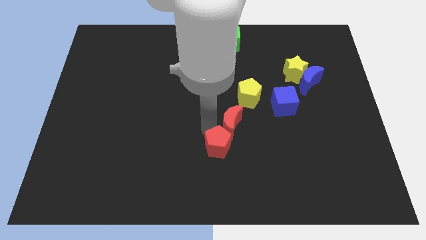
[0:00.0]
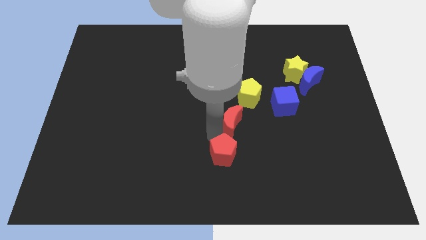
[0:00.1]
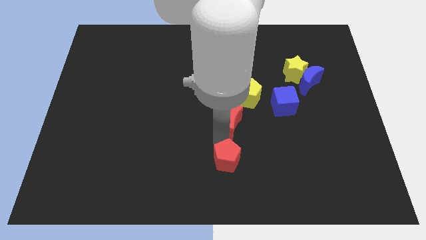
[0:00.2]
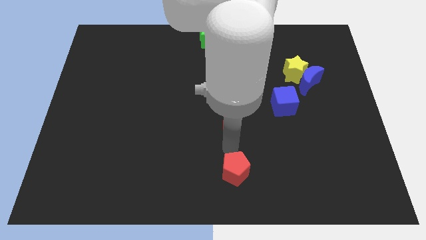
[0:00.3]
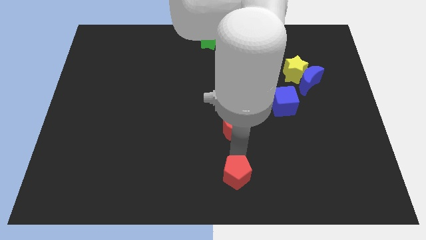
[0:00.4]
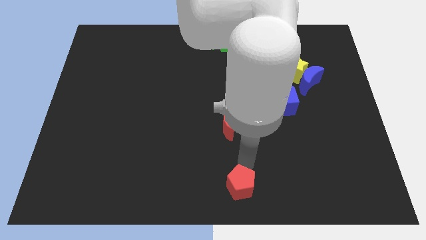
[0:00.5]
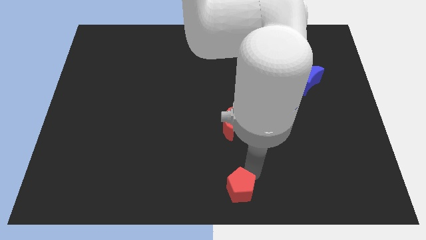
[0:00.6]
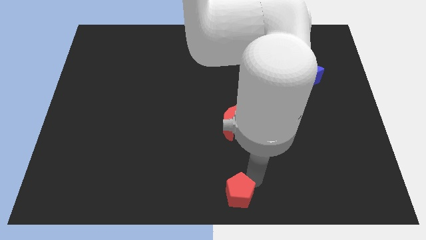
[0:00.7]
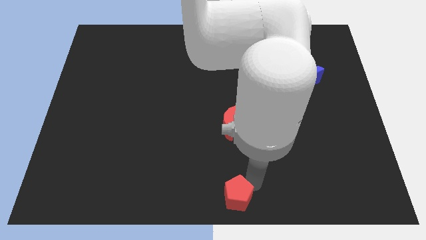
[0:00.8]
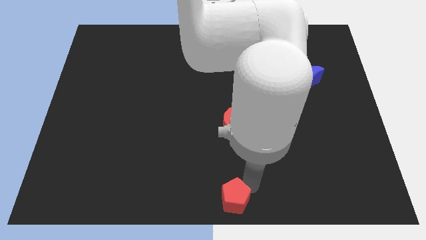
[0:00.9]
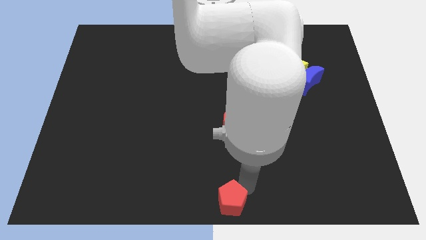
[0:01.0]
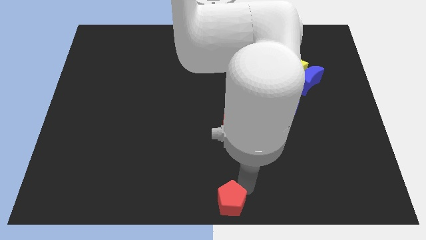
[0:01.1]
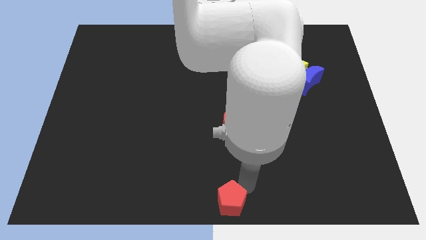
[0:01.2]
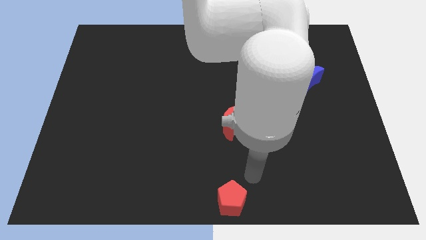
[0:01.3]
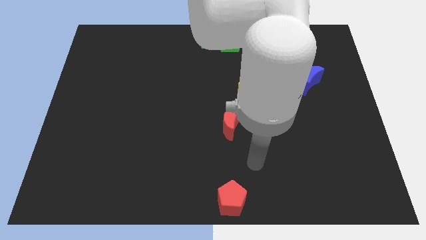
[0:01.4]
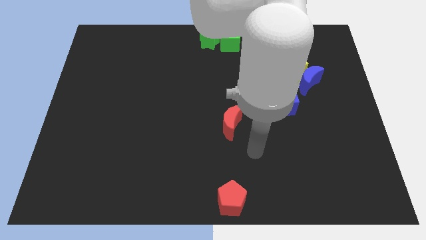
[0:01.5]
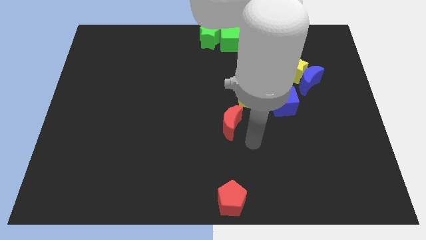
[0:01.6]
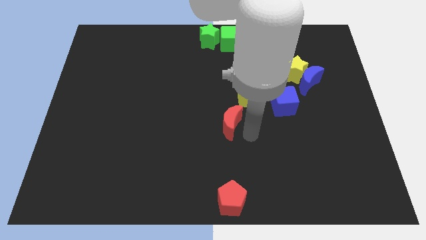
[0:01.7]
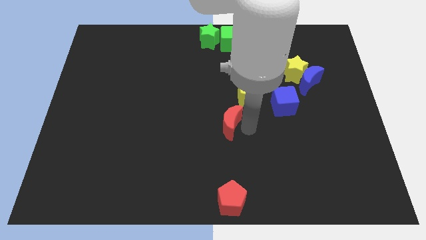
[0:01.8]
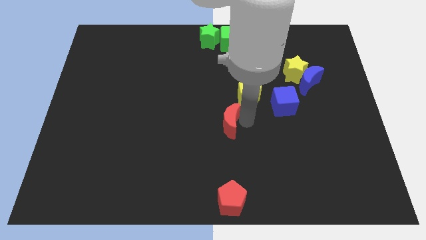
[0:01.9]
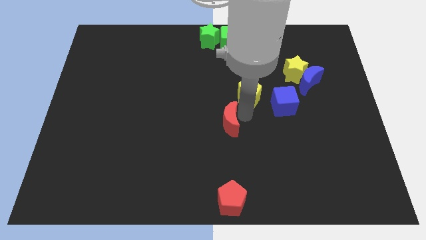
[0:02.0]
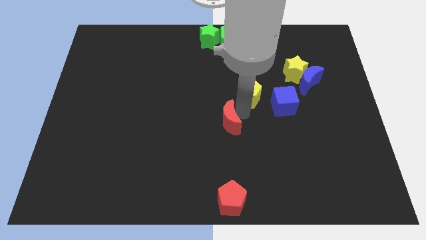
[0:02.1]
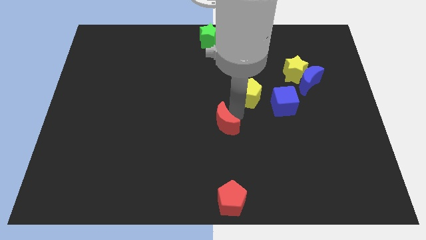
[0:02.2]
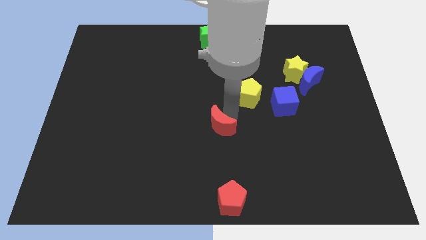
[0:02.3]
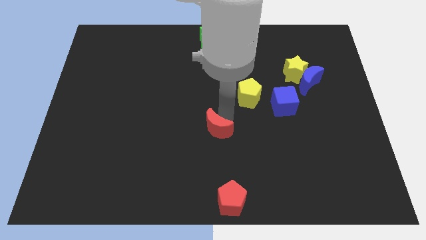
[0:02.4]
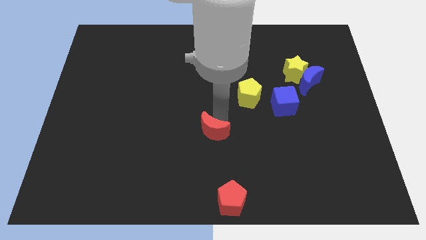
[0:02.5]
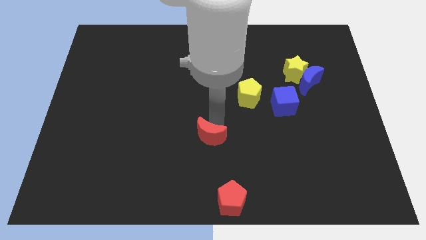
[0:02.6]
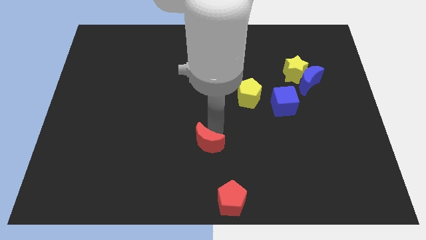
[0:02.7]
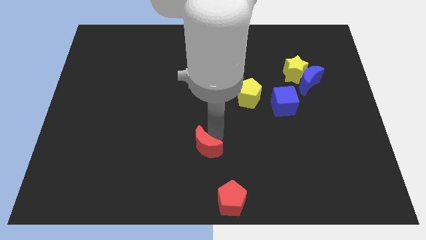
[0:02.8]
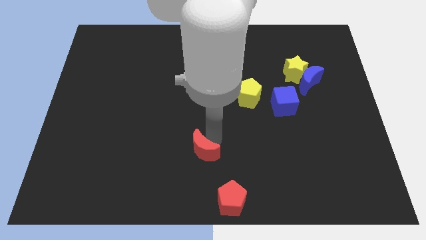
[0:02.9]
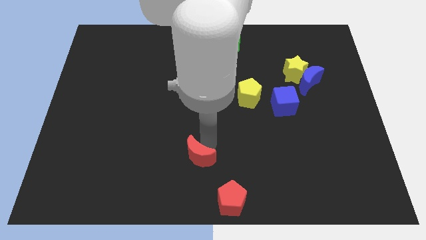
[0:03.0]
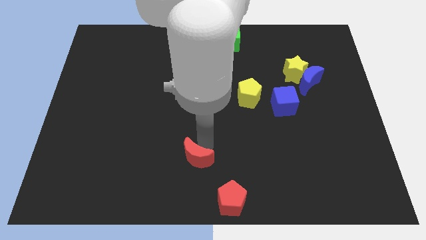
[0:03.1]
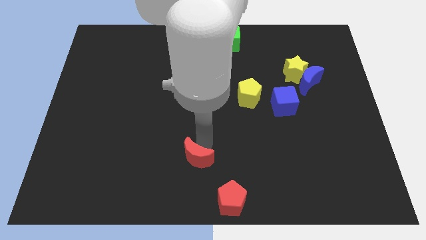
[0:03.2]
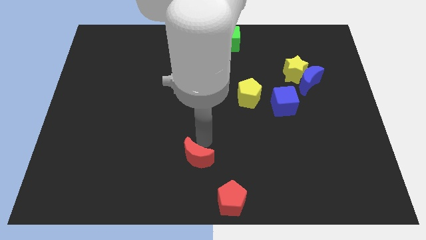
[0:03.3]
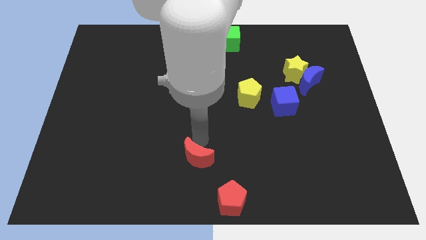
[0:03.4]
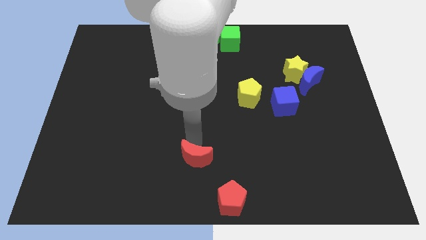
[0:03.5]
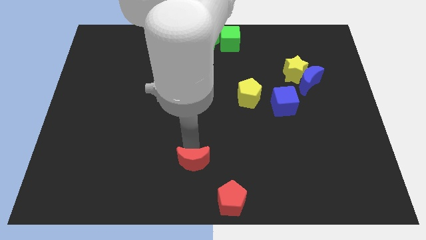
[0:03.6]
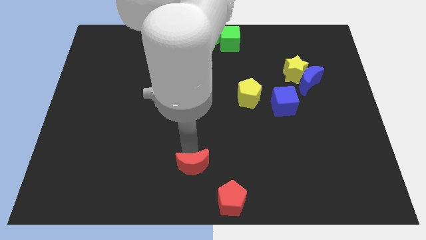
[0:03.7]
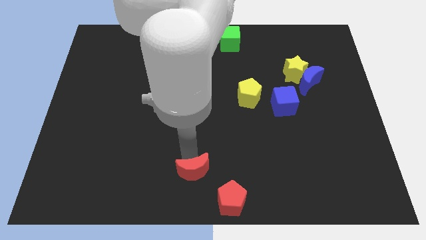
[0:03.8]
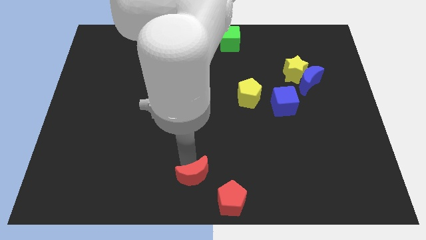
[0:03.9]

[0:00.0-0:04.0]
place the red crescent to the top left of the red pentagon

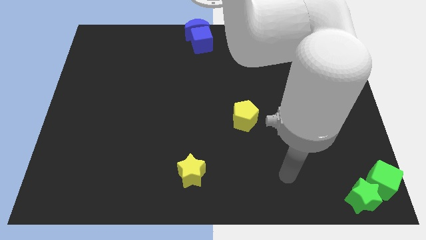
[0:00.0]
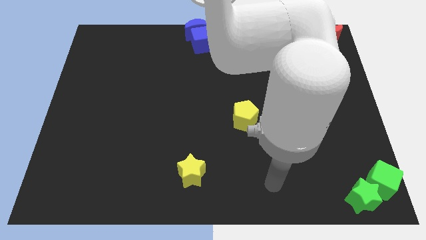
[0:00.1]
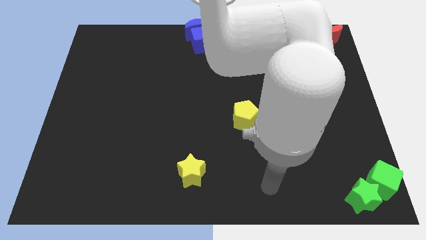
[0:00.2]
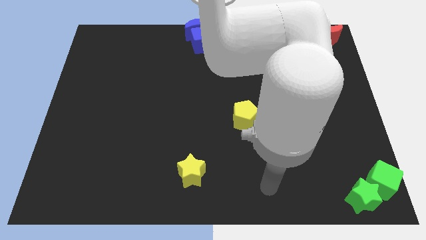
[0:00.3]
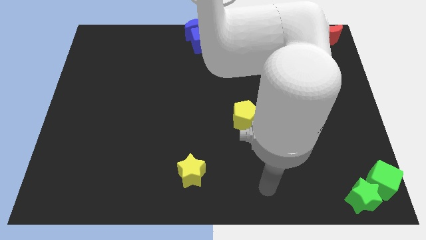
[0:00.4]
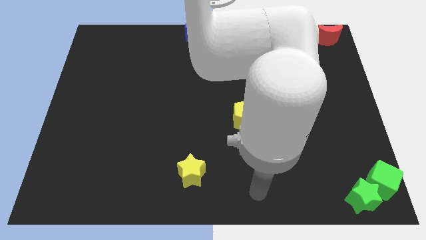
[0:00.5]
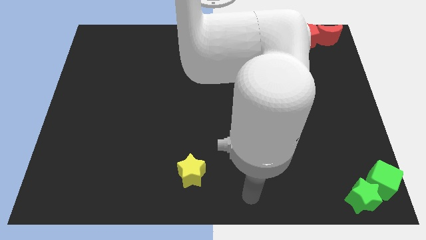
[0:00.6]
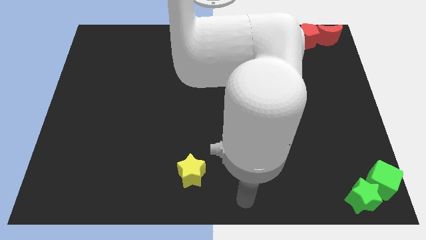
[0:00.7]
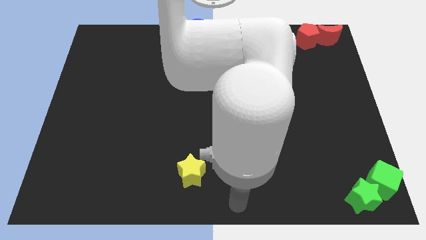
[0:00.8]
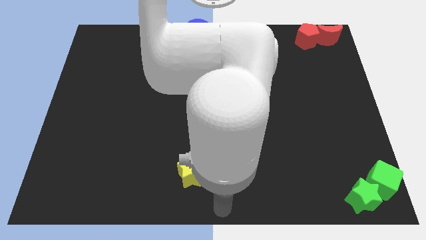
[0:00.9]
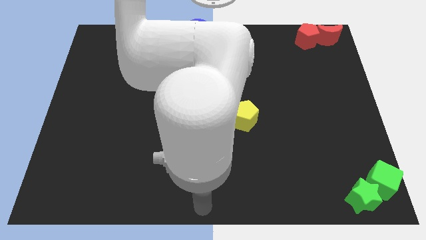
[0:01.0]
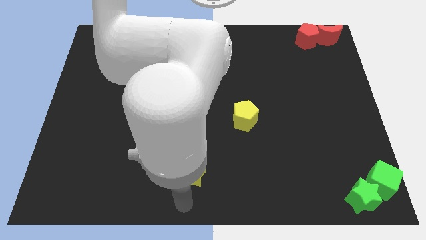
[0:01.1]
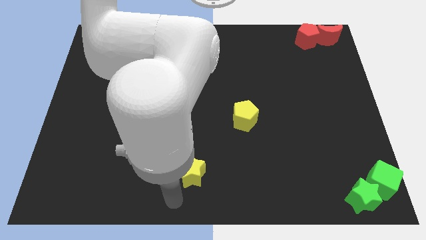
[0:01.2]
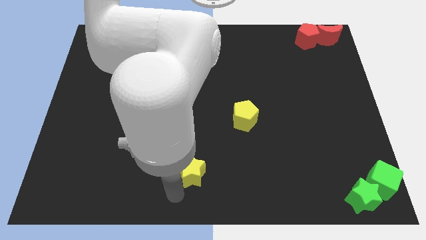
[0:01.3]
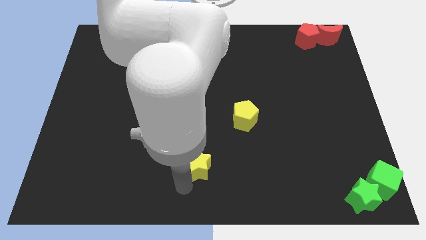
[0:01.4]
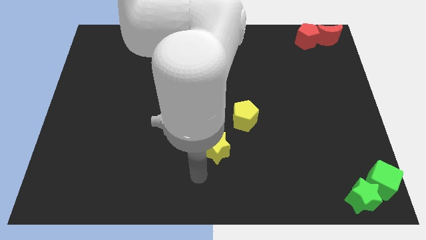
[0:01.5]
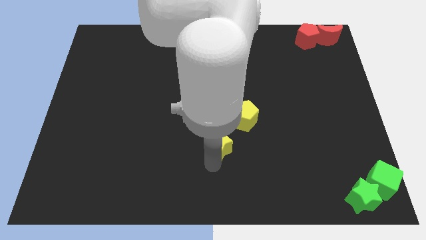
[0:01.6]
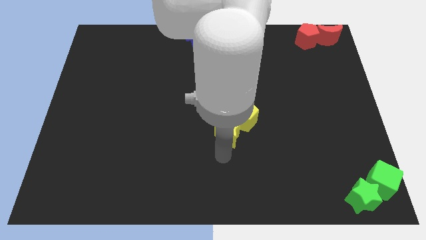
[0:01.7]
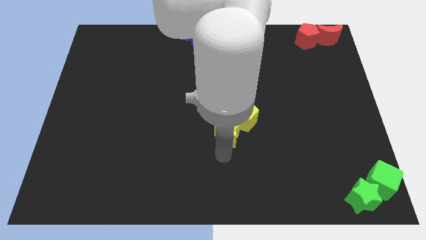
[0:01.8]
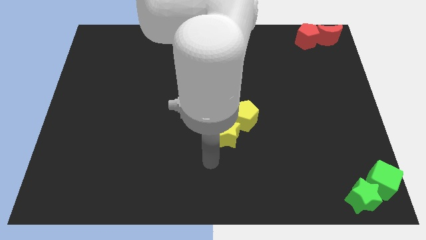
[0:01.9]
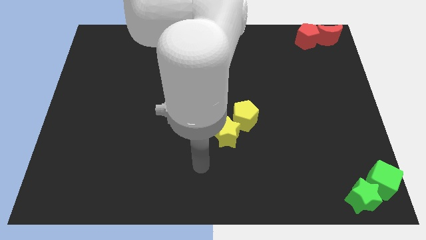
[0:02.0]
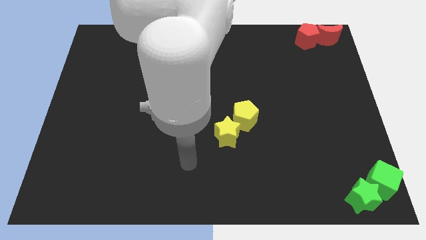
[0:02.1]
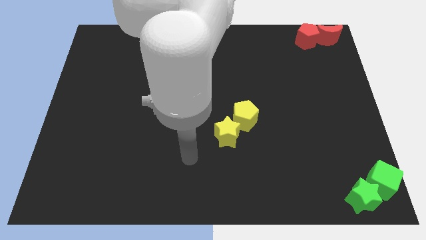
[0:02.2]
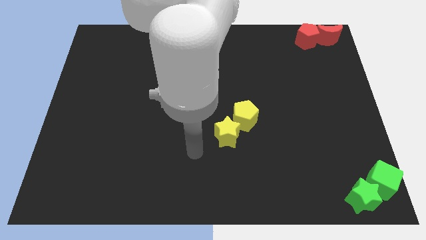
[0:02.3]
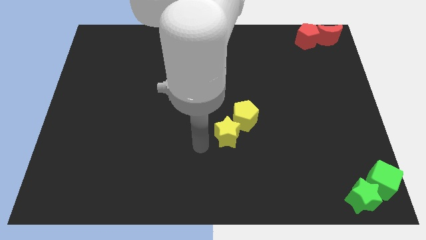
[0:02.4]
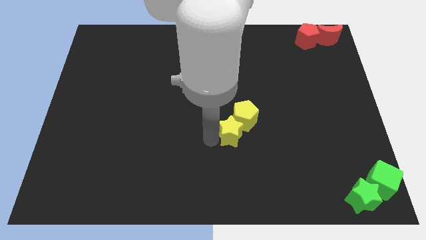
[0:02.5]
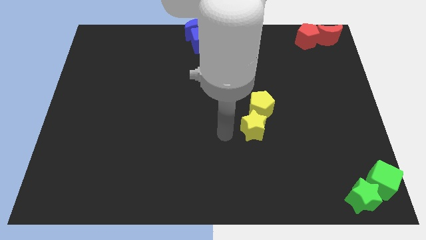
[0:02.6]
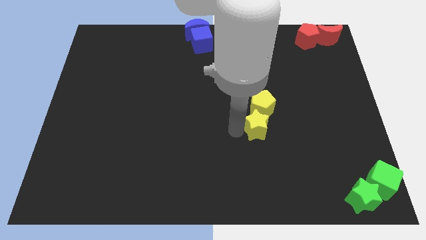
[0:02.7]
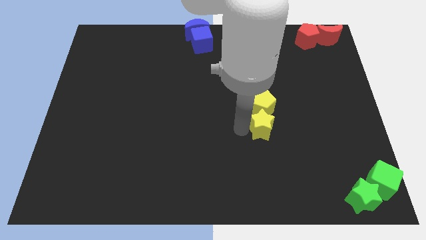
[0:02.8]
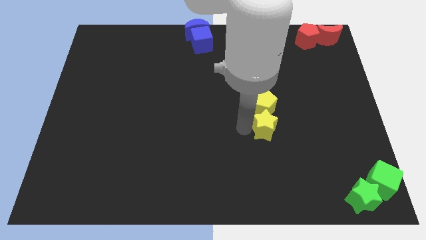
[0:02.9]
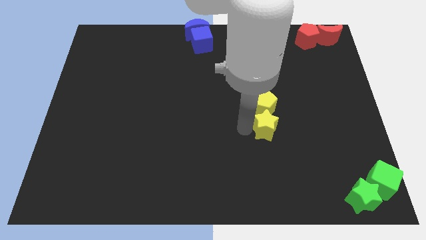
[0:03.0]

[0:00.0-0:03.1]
move yellow star to the yellow pentagon

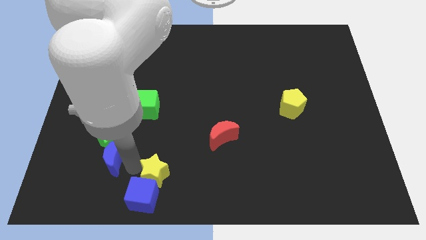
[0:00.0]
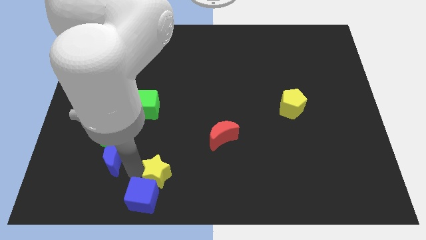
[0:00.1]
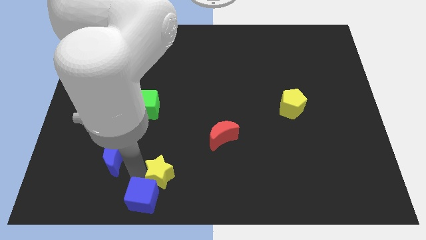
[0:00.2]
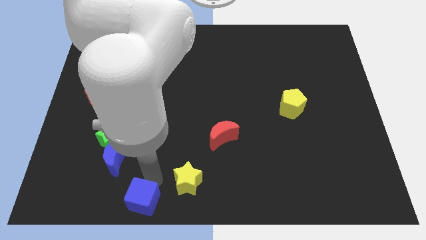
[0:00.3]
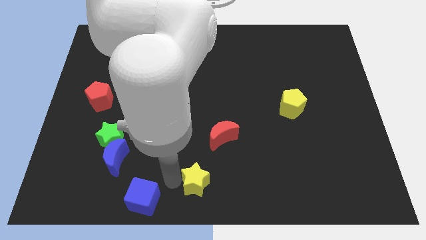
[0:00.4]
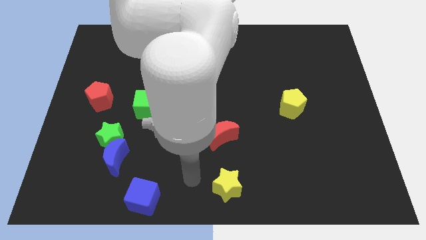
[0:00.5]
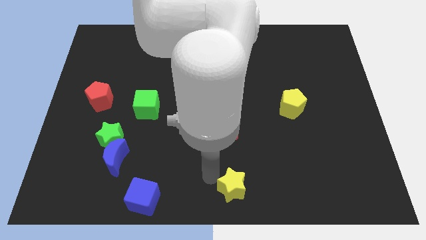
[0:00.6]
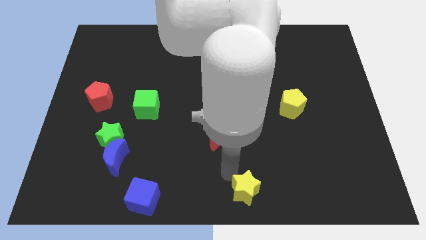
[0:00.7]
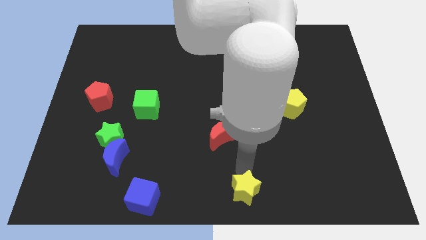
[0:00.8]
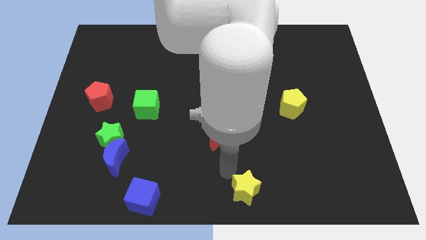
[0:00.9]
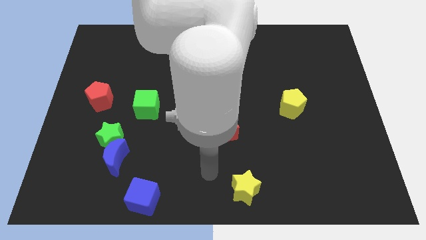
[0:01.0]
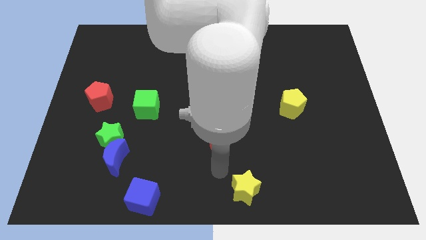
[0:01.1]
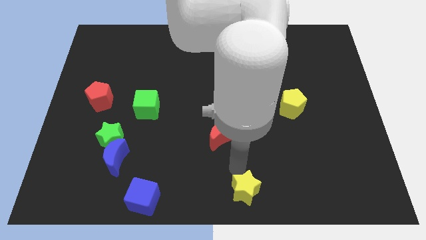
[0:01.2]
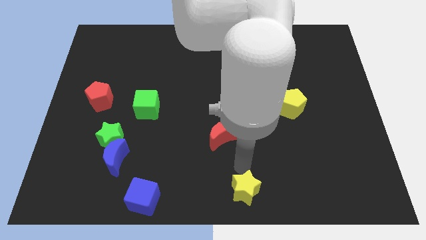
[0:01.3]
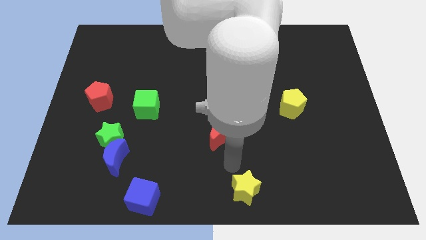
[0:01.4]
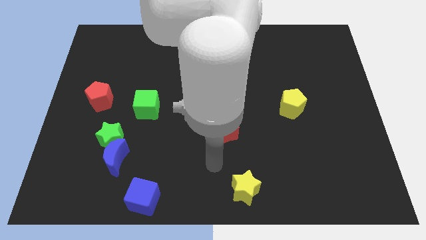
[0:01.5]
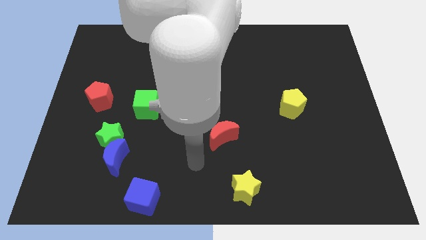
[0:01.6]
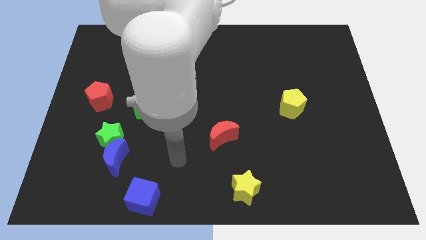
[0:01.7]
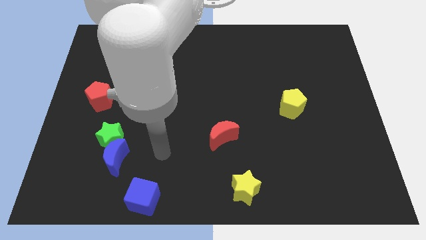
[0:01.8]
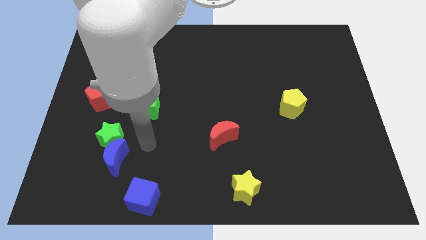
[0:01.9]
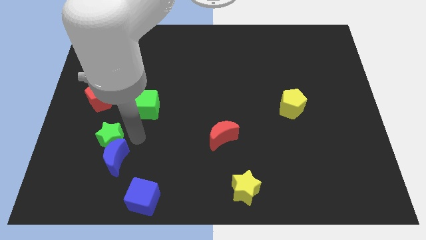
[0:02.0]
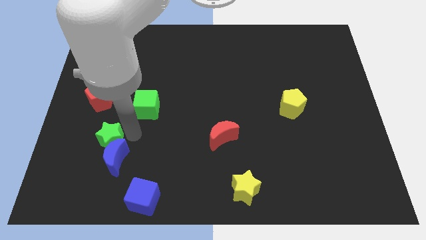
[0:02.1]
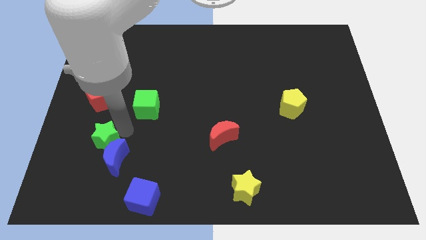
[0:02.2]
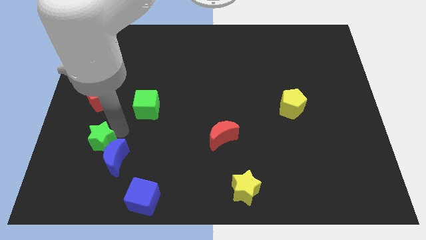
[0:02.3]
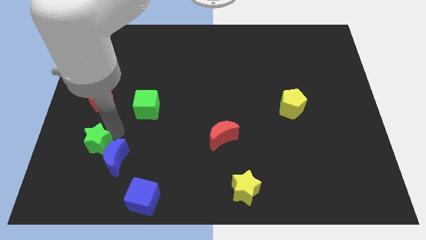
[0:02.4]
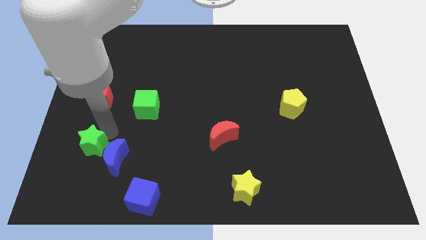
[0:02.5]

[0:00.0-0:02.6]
move the yellow star bottom center of the board
